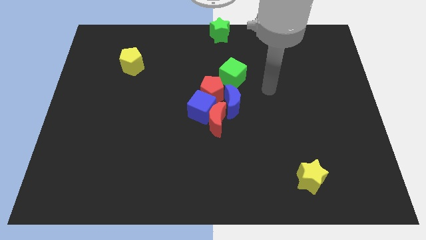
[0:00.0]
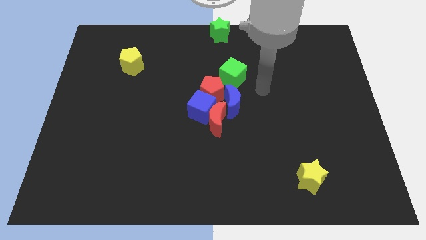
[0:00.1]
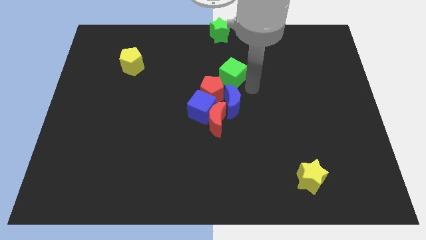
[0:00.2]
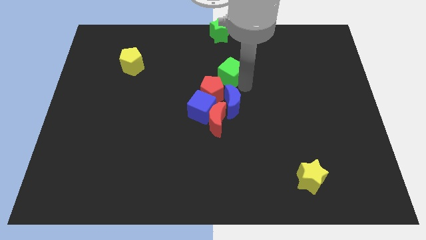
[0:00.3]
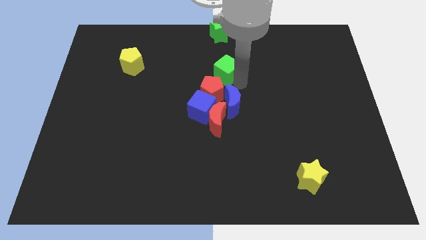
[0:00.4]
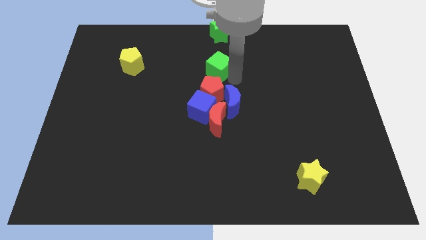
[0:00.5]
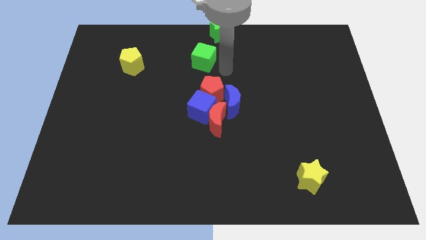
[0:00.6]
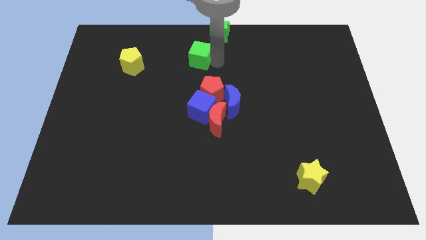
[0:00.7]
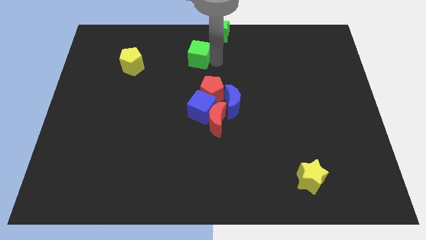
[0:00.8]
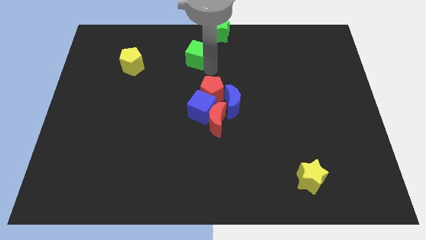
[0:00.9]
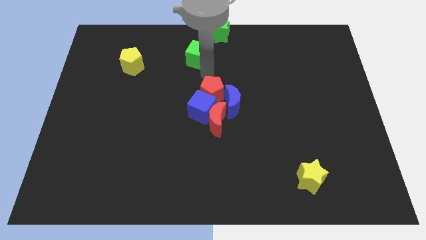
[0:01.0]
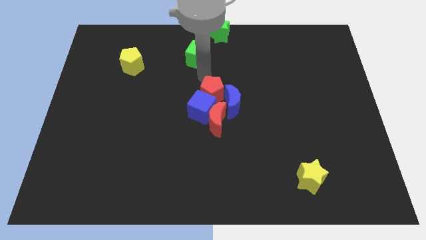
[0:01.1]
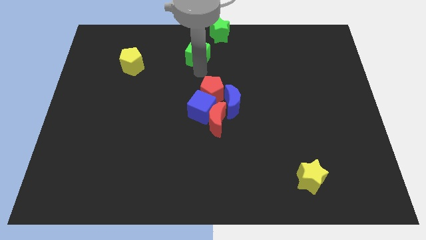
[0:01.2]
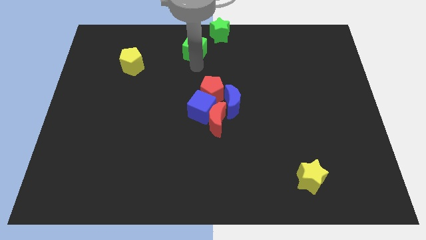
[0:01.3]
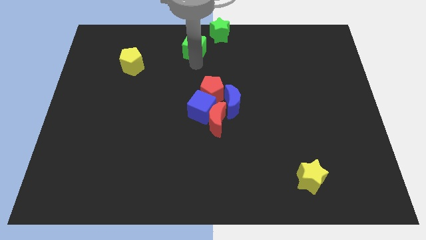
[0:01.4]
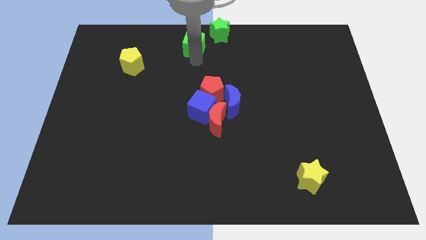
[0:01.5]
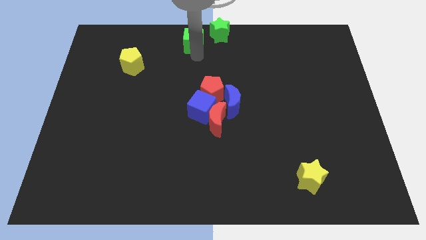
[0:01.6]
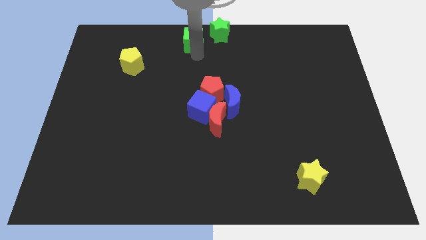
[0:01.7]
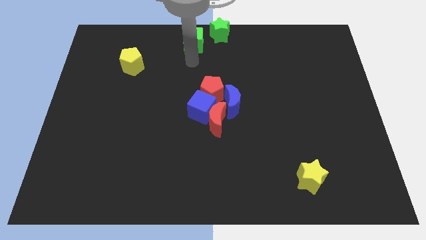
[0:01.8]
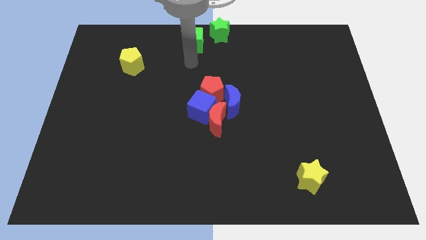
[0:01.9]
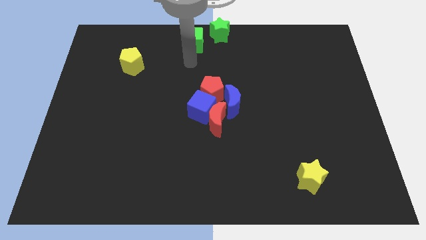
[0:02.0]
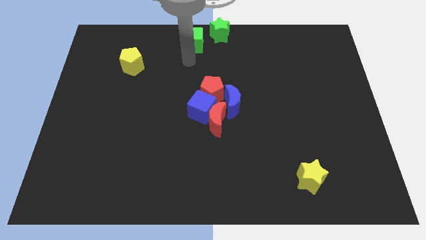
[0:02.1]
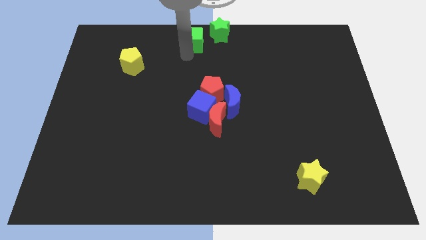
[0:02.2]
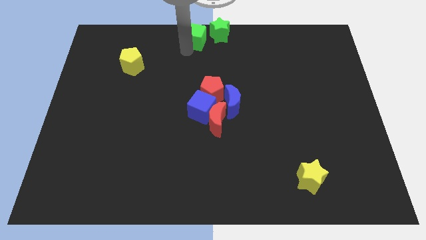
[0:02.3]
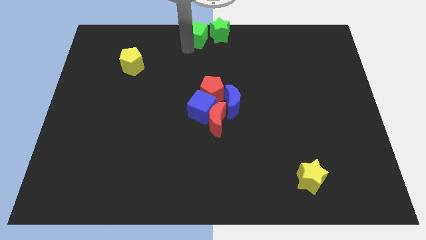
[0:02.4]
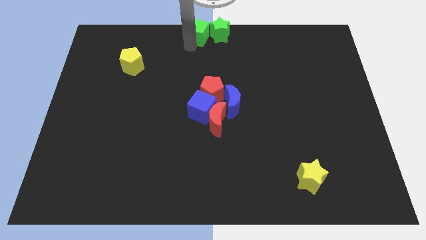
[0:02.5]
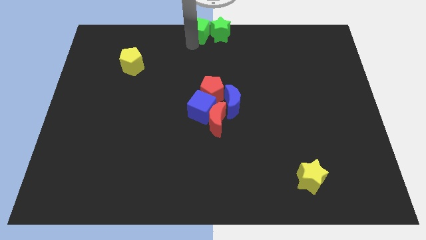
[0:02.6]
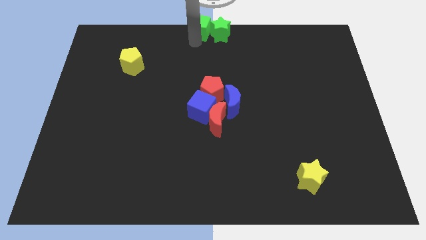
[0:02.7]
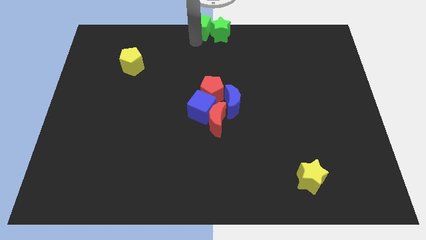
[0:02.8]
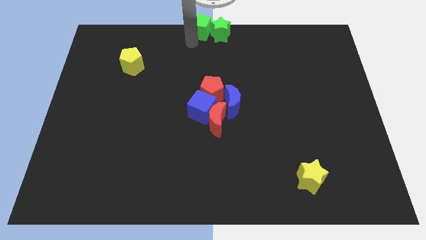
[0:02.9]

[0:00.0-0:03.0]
place the green cube left to the green star

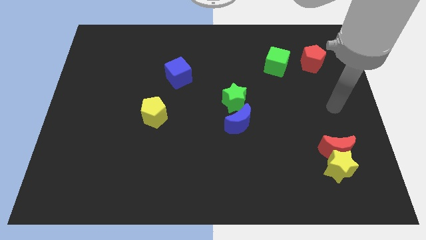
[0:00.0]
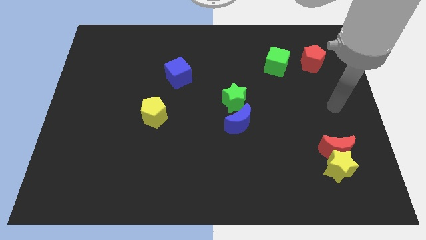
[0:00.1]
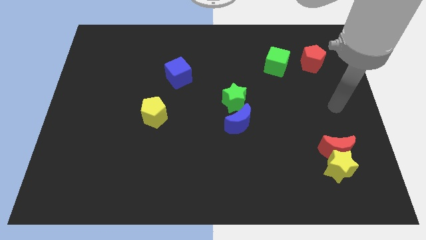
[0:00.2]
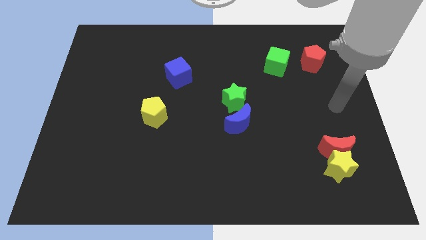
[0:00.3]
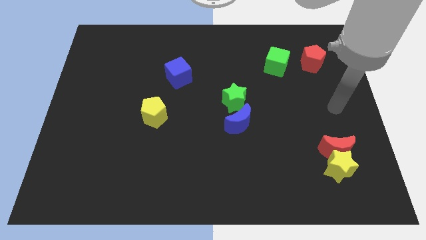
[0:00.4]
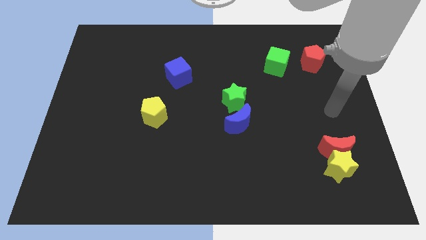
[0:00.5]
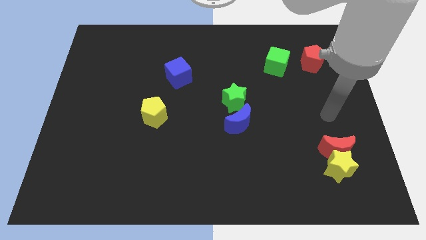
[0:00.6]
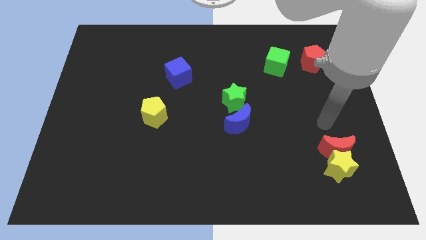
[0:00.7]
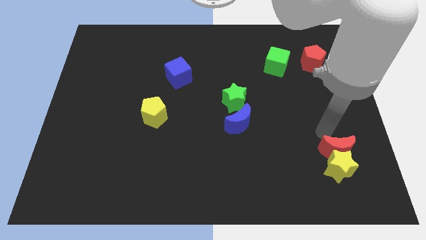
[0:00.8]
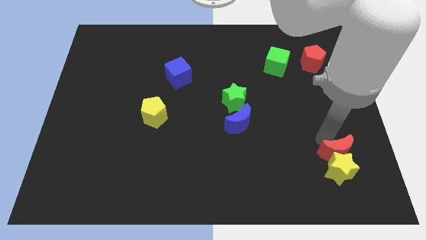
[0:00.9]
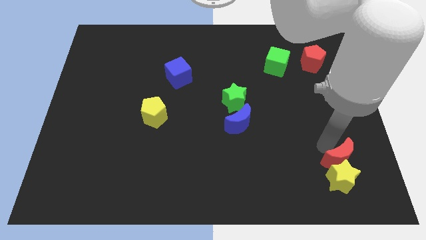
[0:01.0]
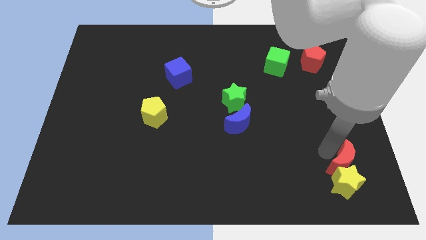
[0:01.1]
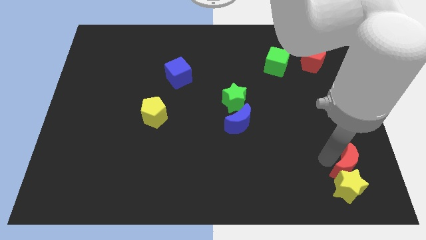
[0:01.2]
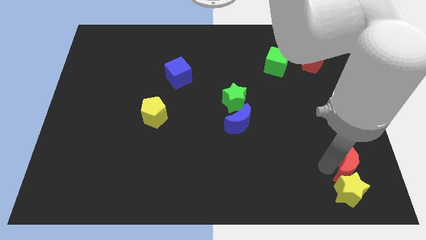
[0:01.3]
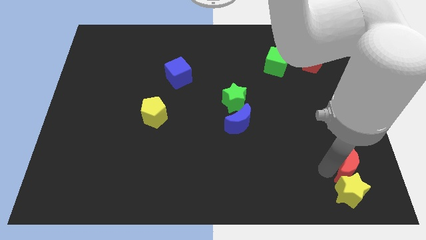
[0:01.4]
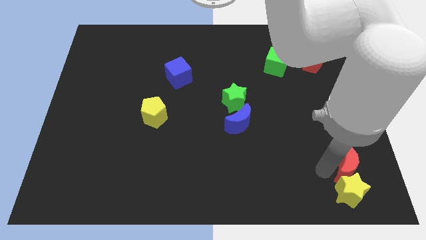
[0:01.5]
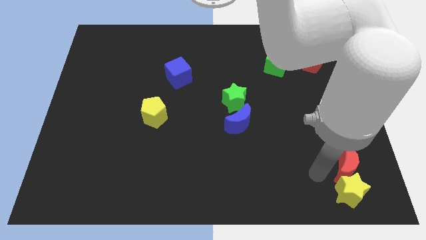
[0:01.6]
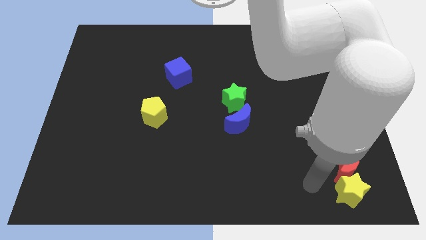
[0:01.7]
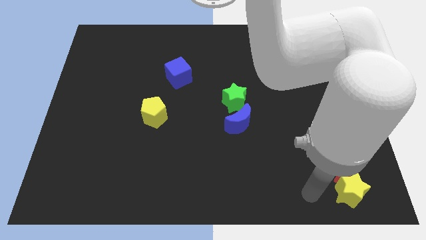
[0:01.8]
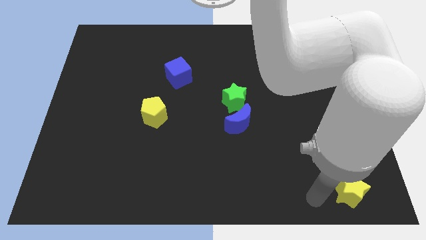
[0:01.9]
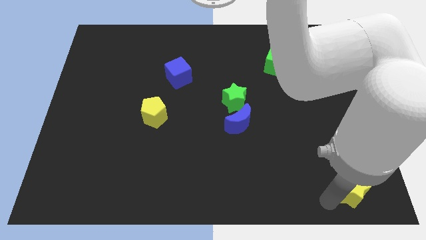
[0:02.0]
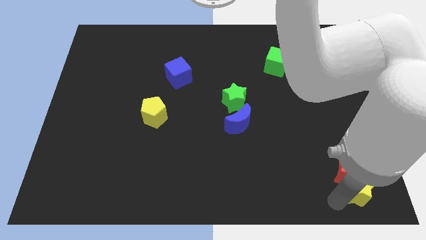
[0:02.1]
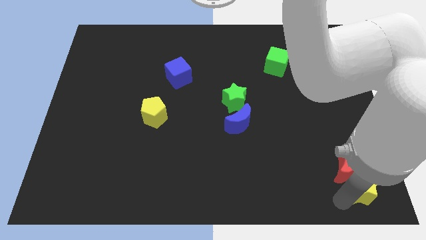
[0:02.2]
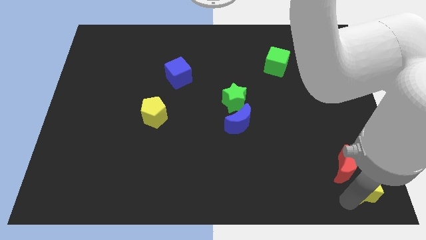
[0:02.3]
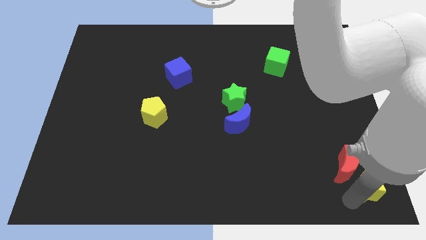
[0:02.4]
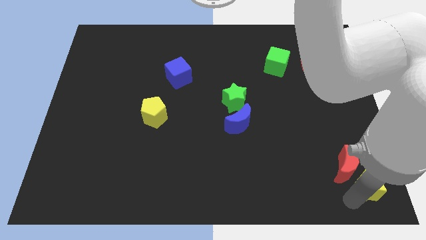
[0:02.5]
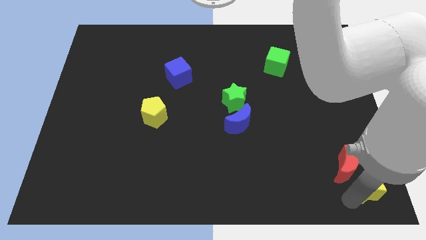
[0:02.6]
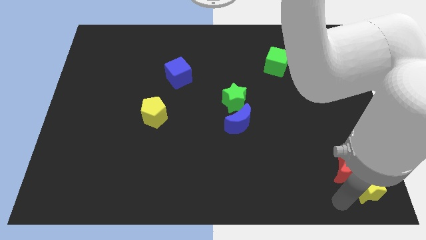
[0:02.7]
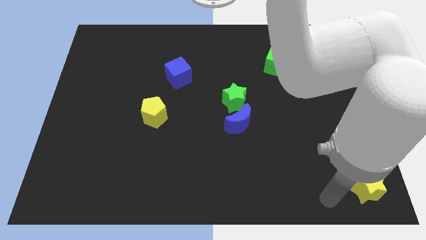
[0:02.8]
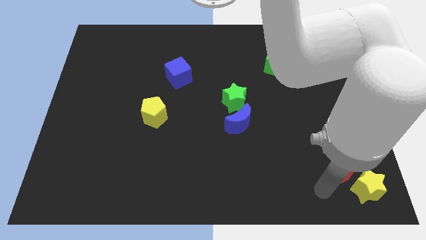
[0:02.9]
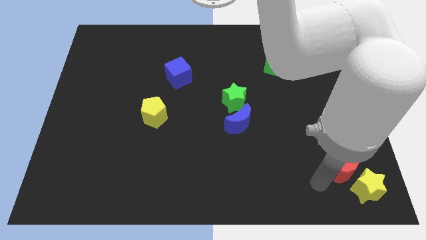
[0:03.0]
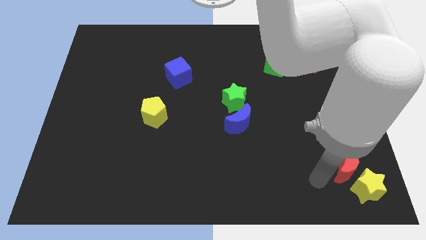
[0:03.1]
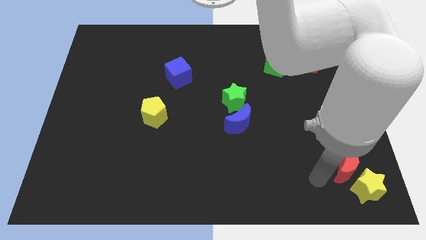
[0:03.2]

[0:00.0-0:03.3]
push the red moon and yellow star to the bottom right corner

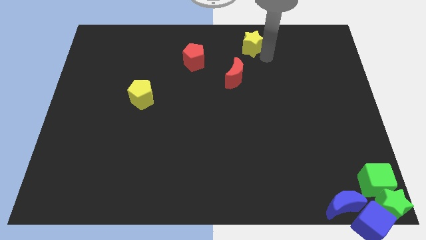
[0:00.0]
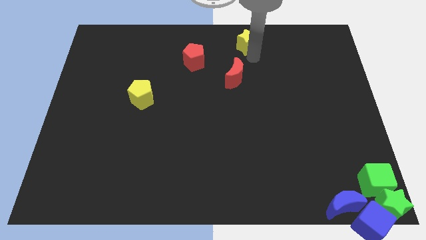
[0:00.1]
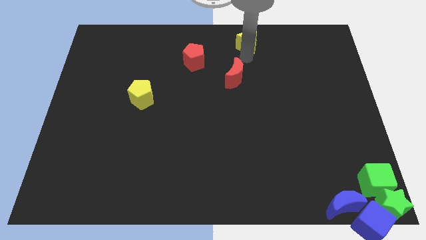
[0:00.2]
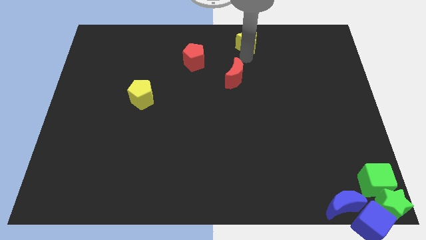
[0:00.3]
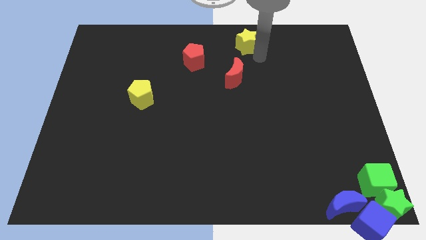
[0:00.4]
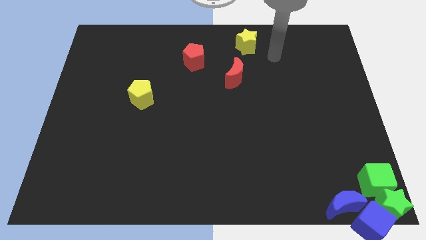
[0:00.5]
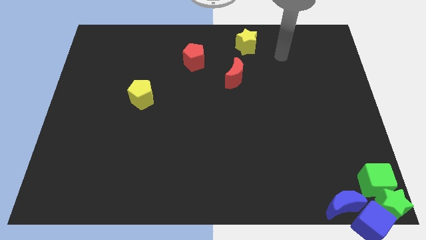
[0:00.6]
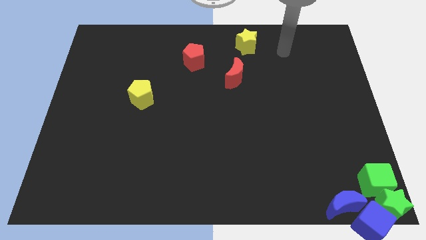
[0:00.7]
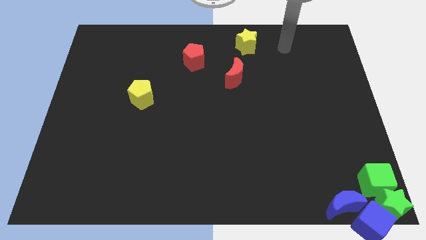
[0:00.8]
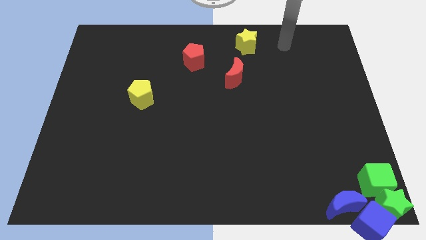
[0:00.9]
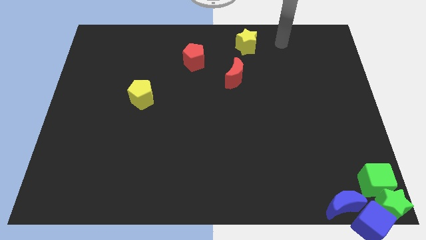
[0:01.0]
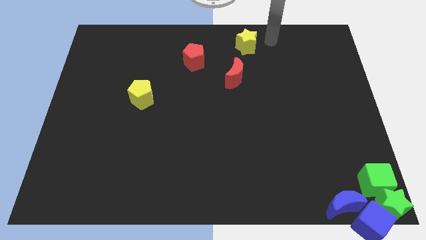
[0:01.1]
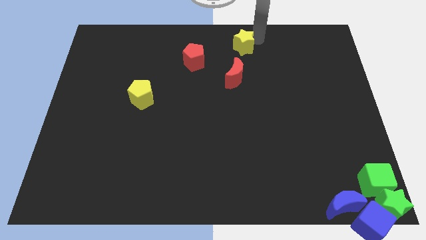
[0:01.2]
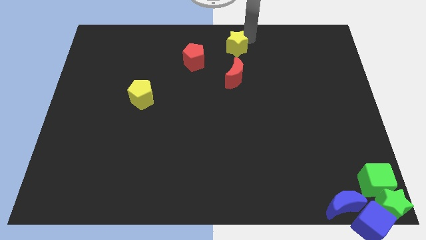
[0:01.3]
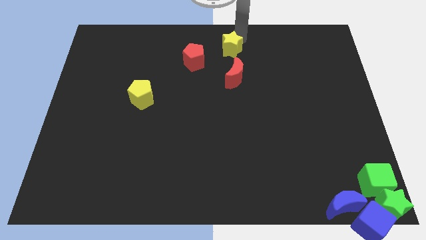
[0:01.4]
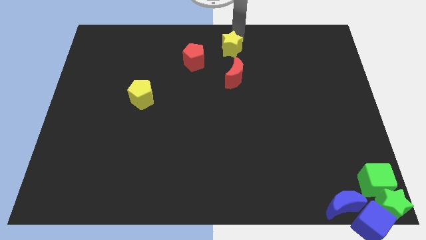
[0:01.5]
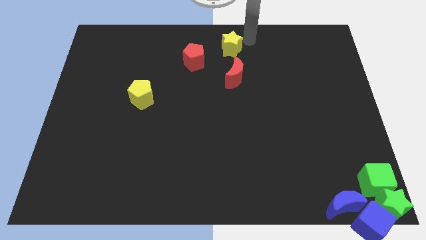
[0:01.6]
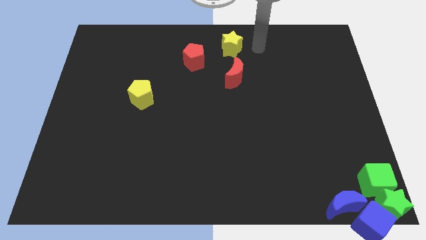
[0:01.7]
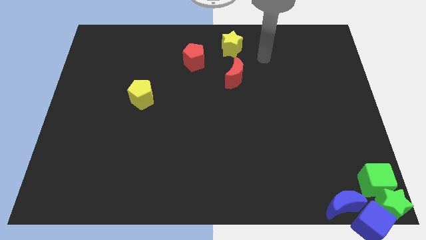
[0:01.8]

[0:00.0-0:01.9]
place the yellow star above the red crescent

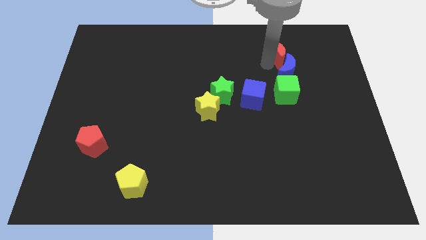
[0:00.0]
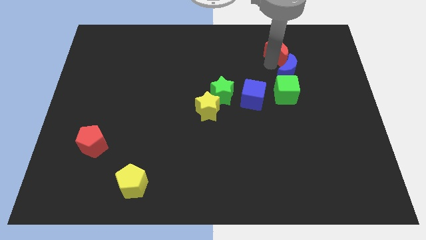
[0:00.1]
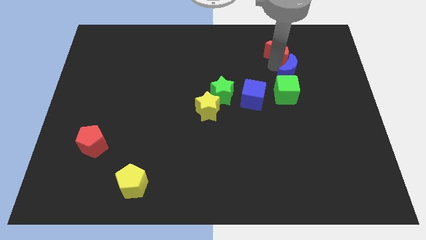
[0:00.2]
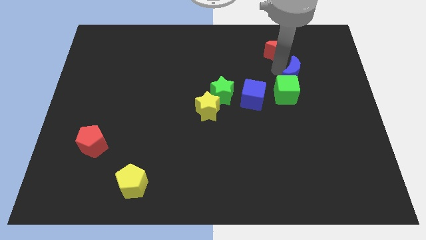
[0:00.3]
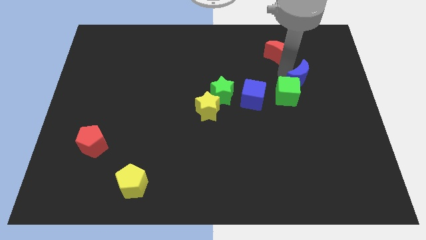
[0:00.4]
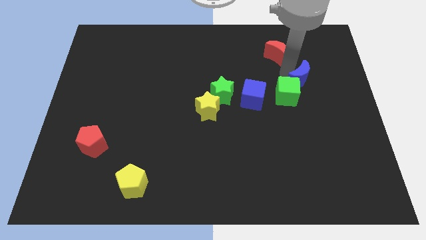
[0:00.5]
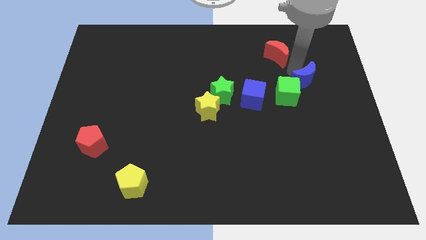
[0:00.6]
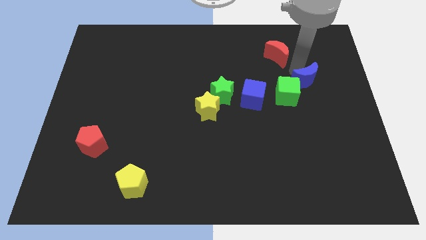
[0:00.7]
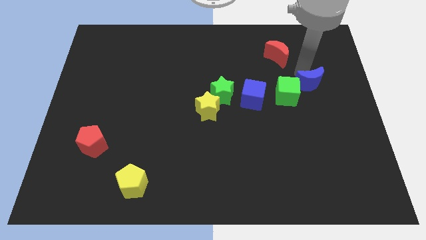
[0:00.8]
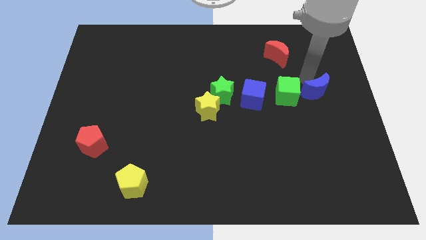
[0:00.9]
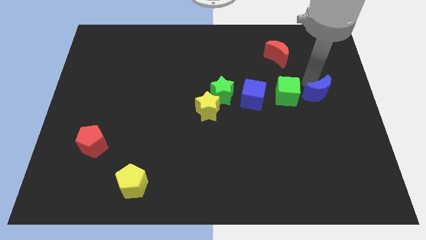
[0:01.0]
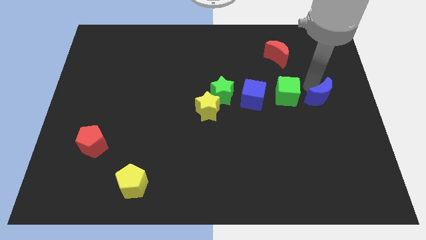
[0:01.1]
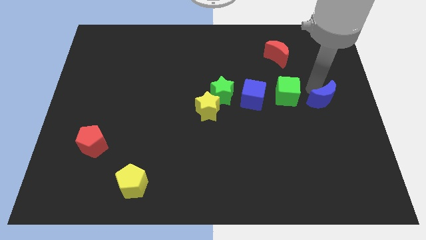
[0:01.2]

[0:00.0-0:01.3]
separate the blue moon from red moon
